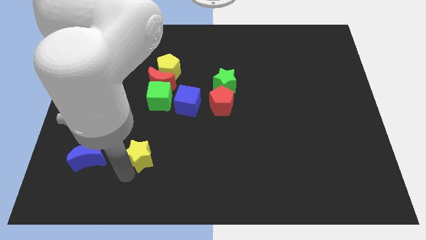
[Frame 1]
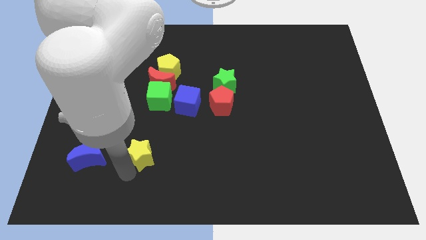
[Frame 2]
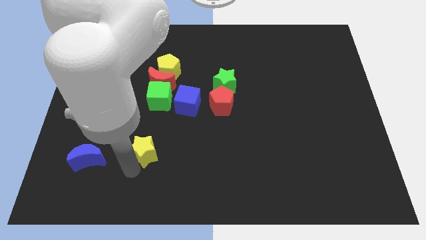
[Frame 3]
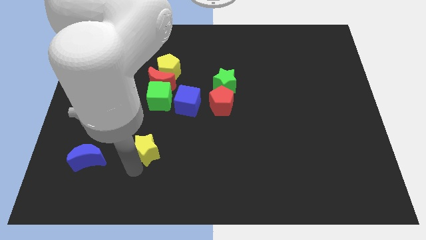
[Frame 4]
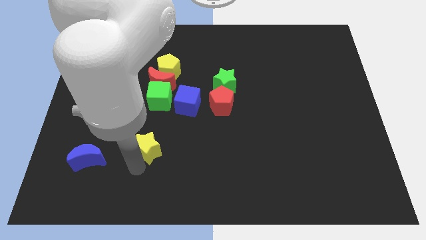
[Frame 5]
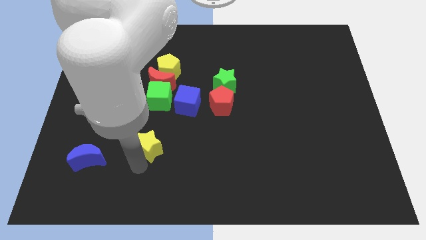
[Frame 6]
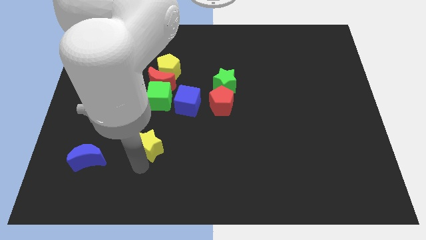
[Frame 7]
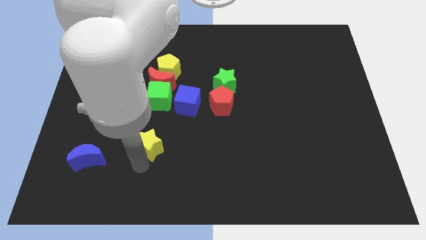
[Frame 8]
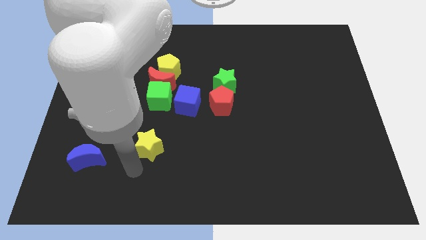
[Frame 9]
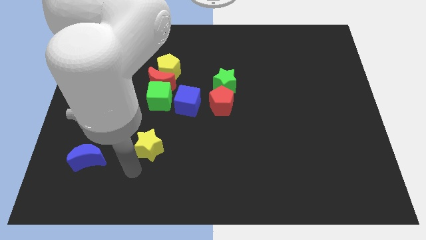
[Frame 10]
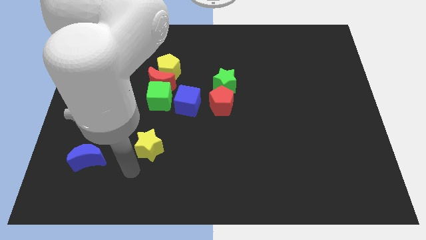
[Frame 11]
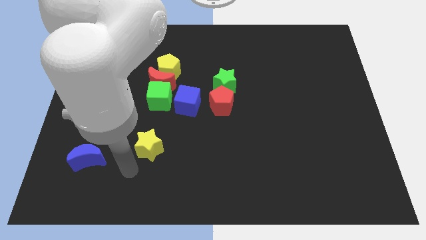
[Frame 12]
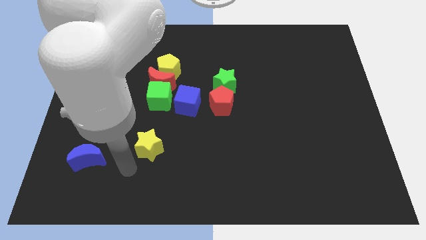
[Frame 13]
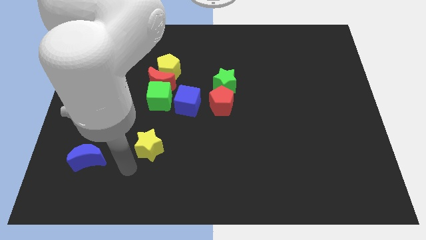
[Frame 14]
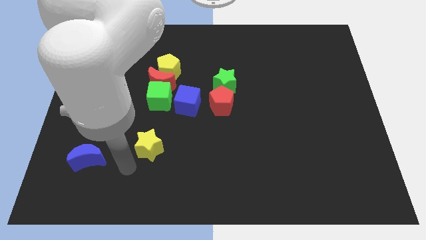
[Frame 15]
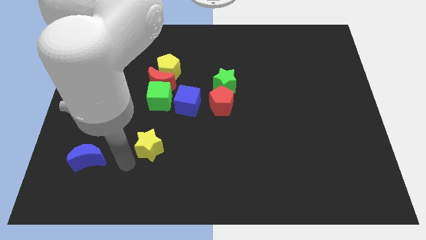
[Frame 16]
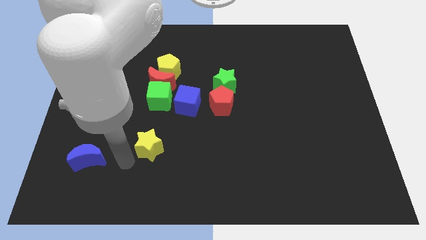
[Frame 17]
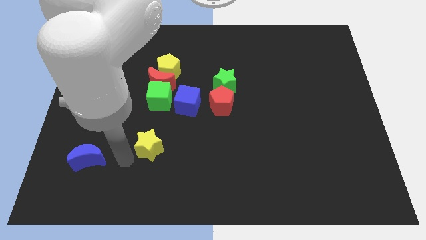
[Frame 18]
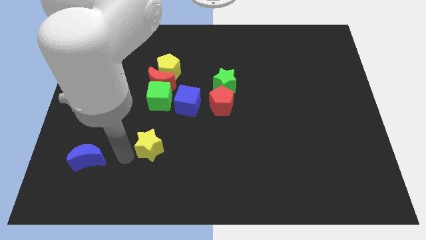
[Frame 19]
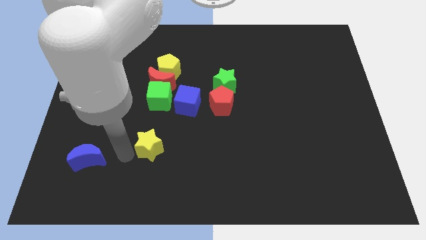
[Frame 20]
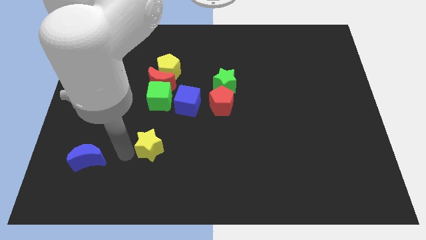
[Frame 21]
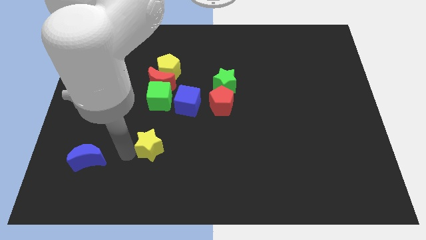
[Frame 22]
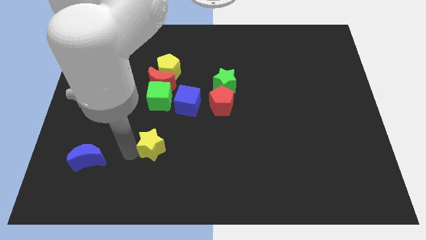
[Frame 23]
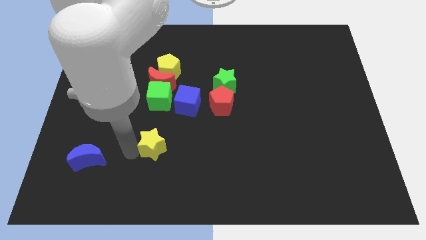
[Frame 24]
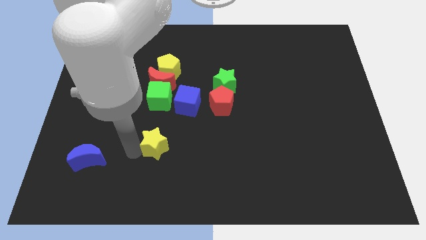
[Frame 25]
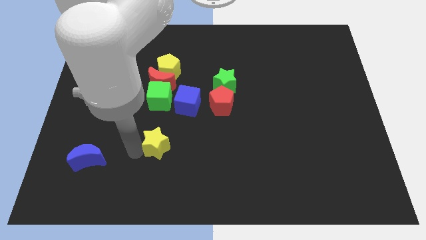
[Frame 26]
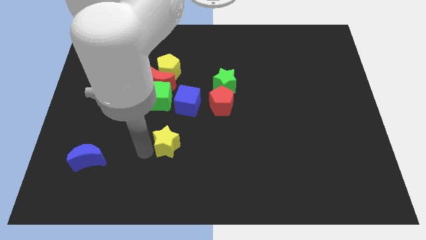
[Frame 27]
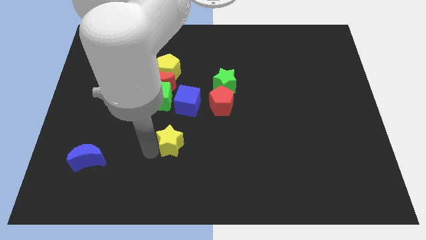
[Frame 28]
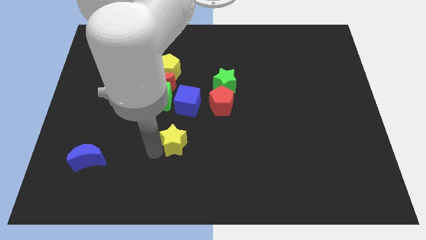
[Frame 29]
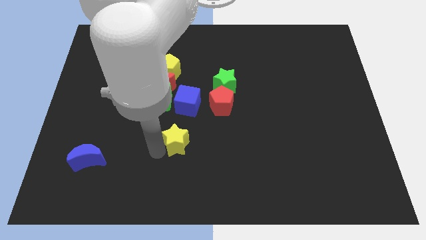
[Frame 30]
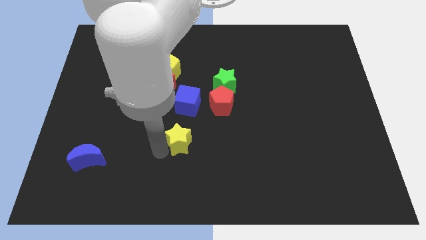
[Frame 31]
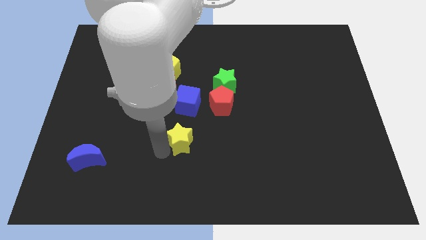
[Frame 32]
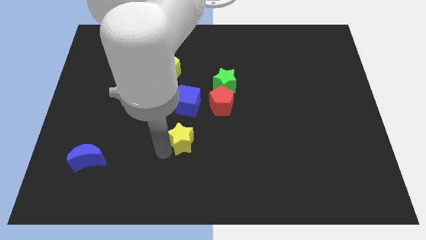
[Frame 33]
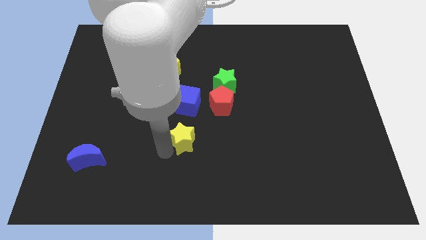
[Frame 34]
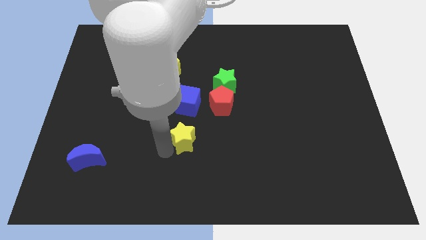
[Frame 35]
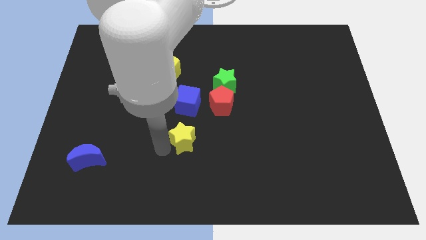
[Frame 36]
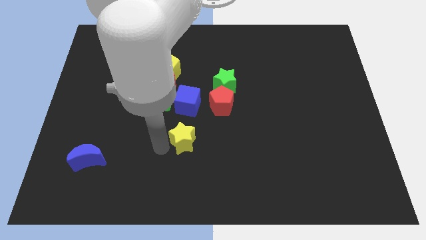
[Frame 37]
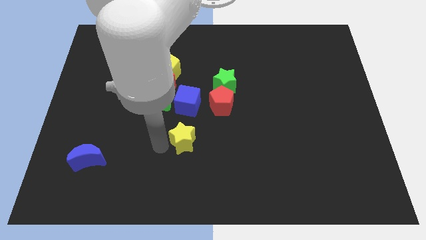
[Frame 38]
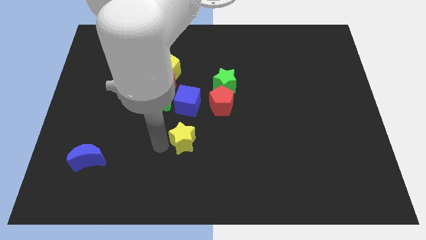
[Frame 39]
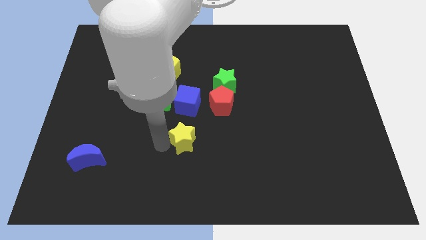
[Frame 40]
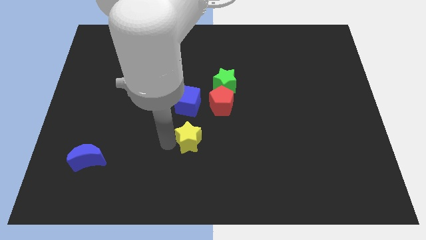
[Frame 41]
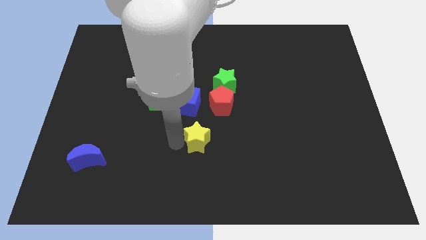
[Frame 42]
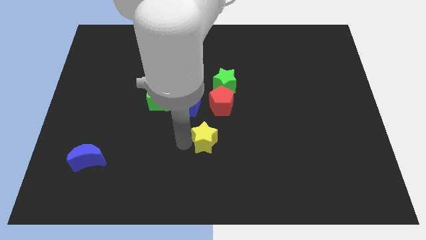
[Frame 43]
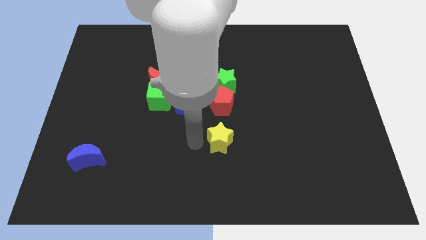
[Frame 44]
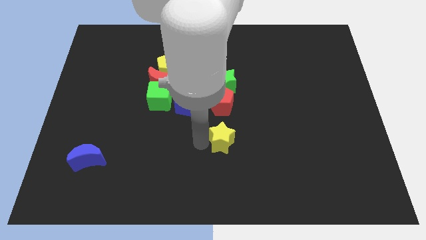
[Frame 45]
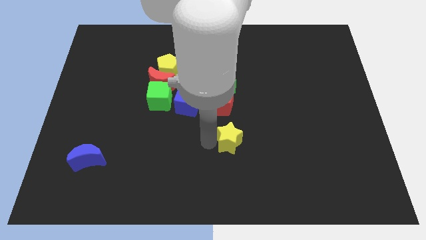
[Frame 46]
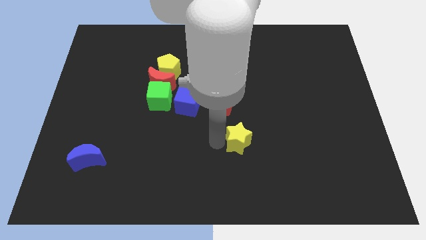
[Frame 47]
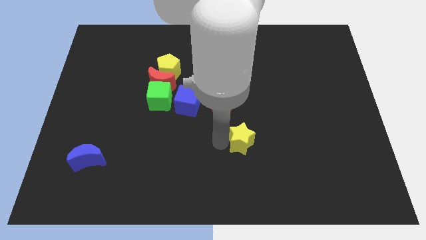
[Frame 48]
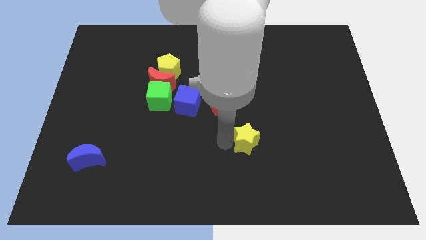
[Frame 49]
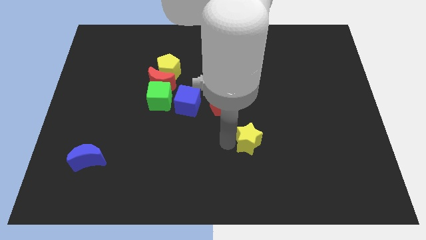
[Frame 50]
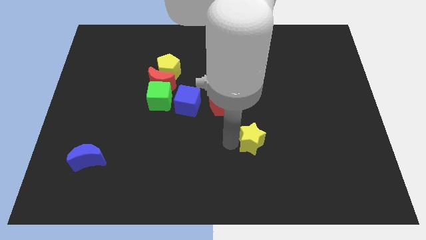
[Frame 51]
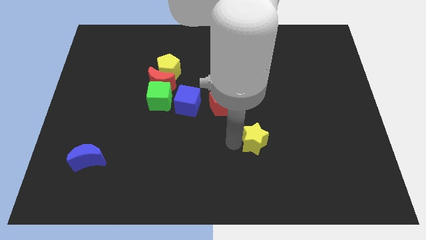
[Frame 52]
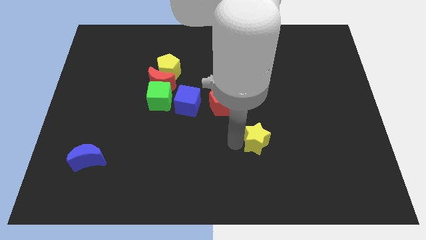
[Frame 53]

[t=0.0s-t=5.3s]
push the yellow star towards the right side

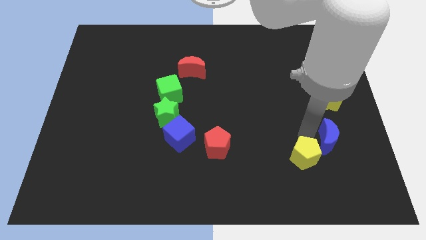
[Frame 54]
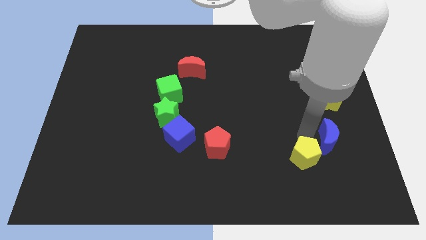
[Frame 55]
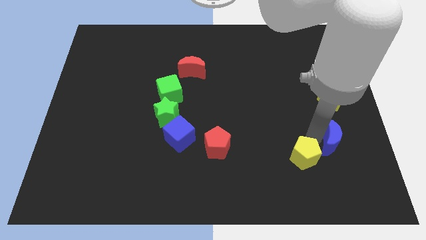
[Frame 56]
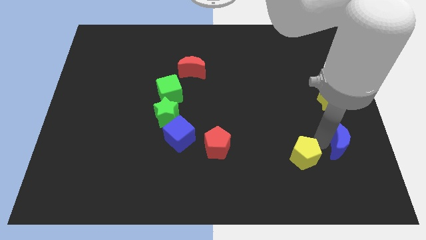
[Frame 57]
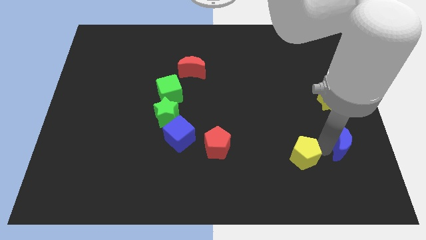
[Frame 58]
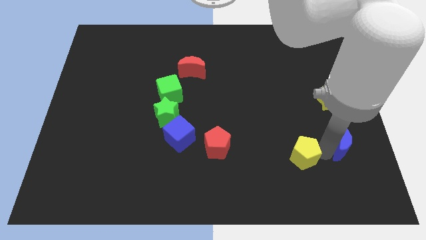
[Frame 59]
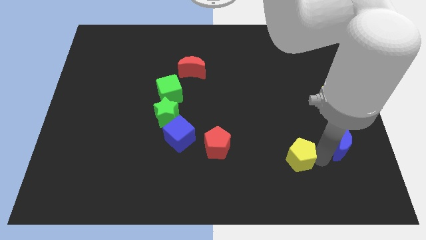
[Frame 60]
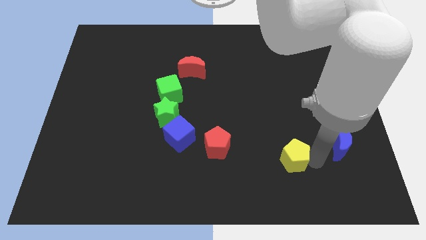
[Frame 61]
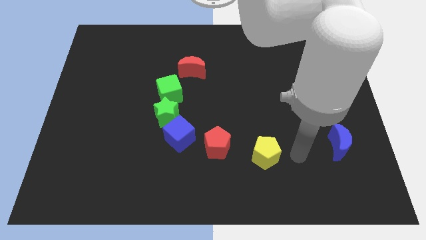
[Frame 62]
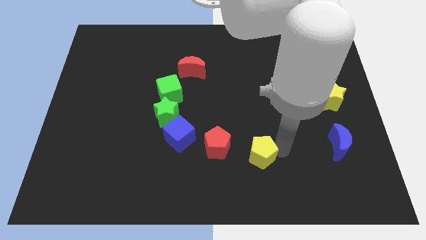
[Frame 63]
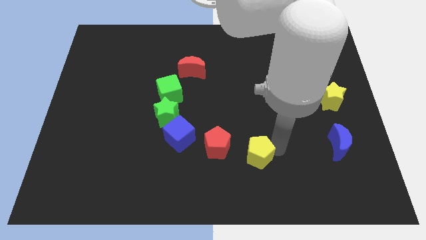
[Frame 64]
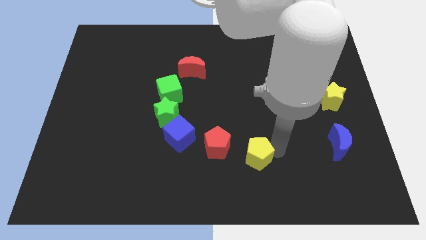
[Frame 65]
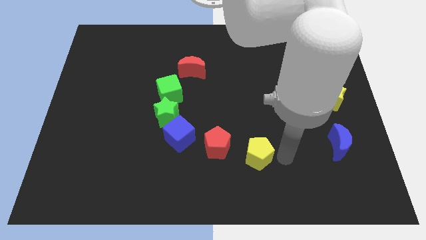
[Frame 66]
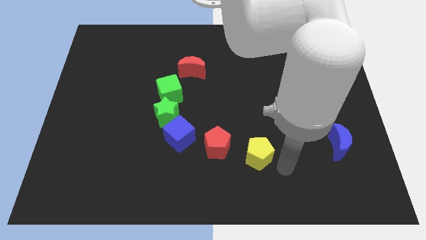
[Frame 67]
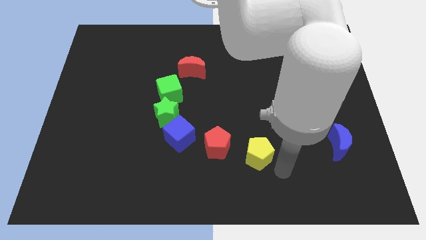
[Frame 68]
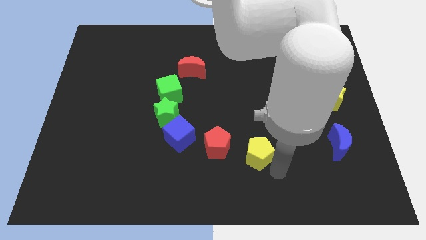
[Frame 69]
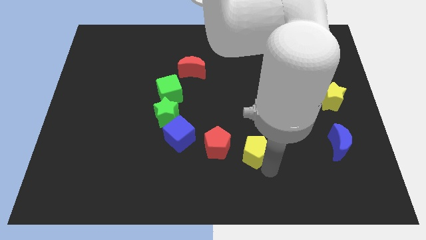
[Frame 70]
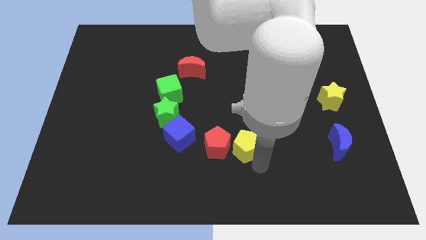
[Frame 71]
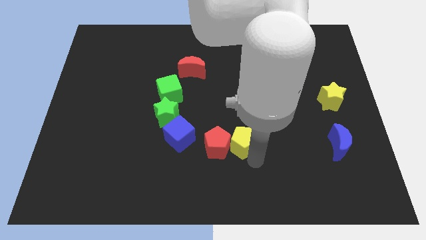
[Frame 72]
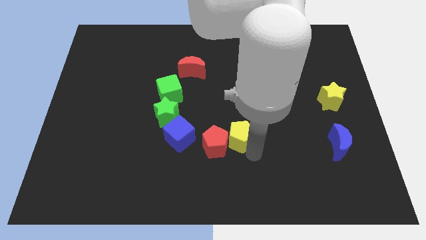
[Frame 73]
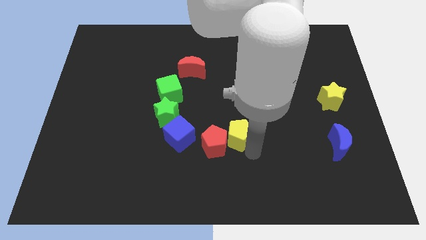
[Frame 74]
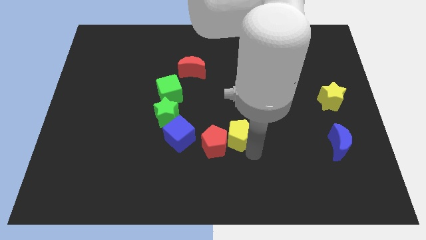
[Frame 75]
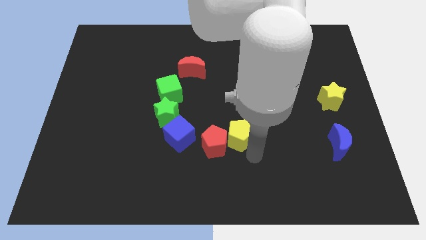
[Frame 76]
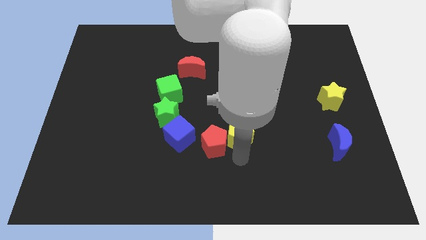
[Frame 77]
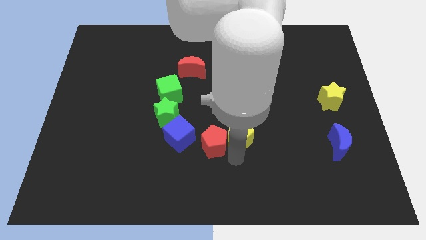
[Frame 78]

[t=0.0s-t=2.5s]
push yellow pentagon in to red pentagon

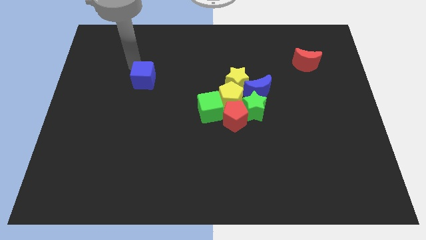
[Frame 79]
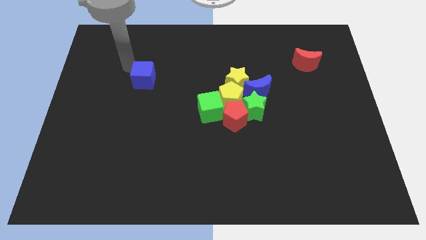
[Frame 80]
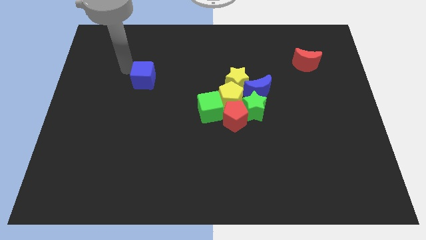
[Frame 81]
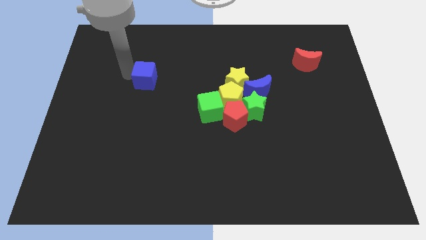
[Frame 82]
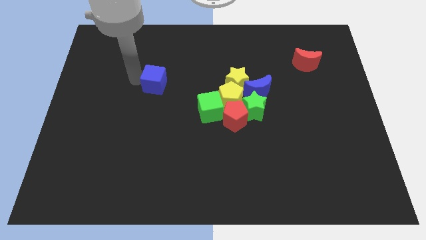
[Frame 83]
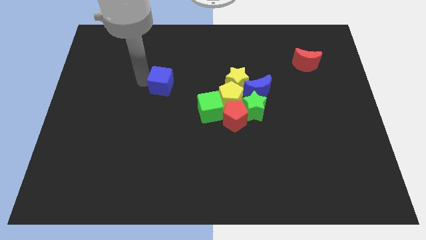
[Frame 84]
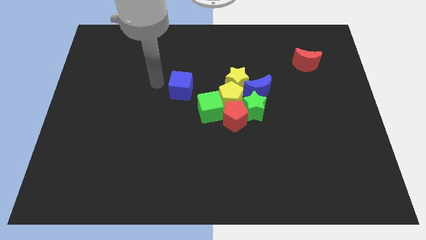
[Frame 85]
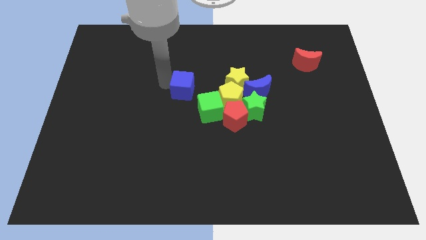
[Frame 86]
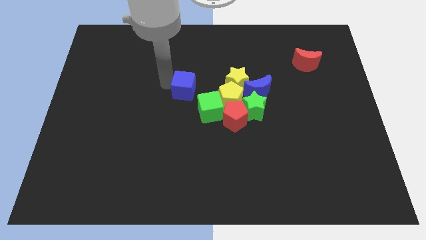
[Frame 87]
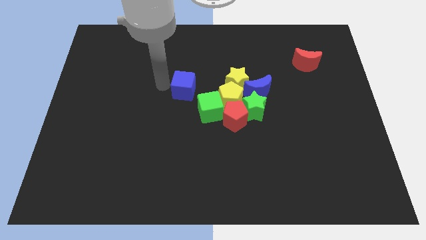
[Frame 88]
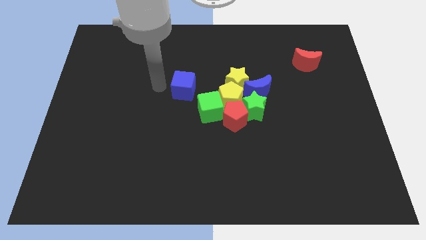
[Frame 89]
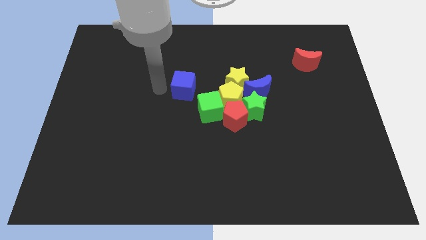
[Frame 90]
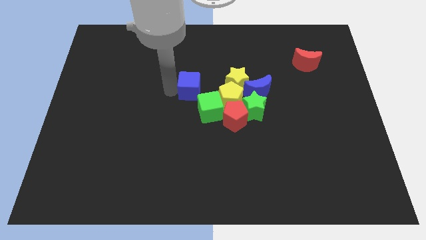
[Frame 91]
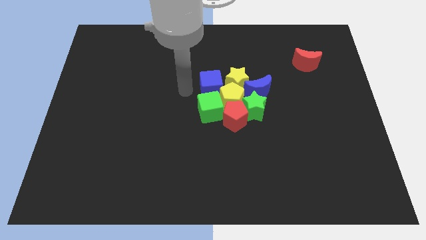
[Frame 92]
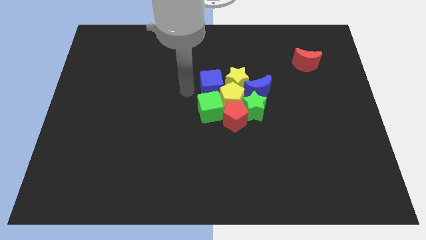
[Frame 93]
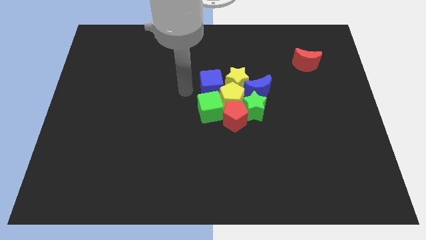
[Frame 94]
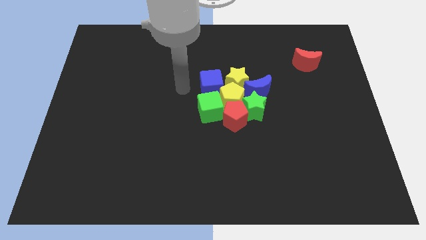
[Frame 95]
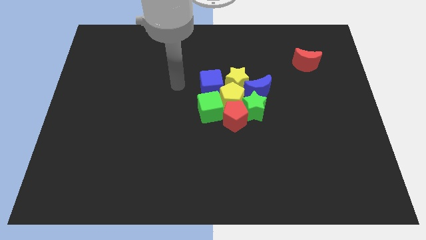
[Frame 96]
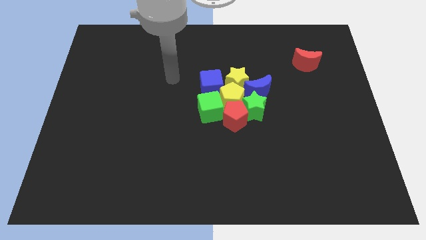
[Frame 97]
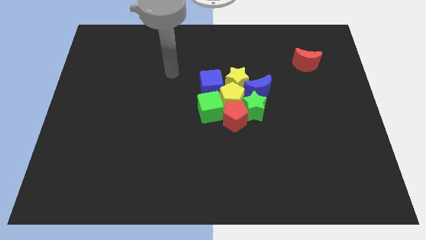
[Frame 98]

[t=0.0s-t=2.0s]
push the blue cube near to the blocks
